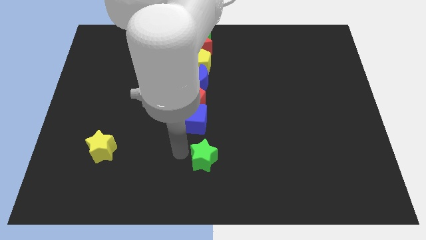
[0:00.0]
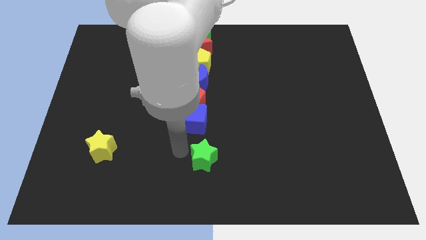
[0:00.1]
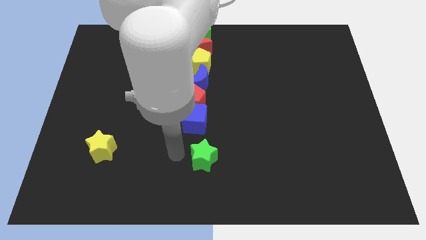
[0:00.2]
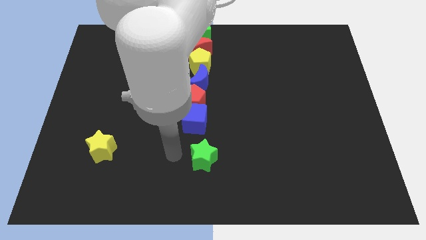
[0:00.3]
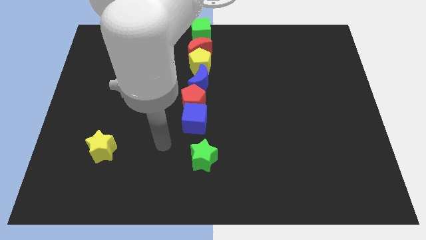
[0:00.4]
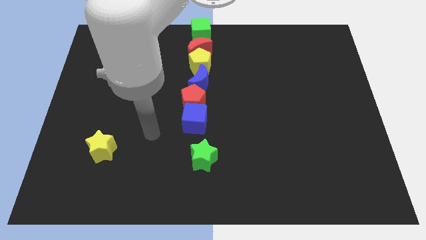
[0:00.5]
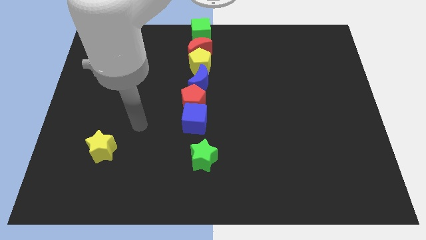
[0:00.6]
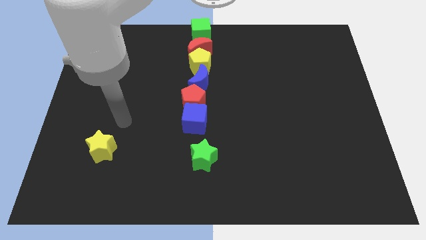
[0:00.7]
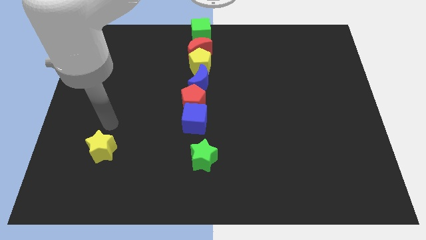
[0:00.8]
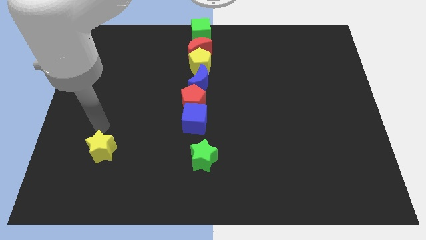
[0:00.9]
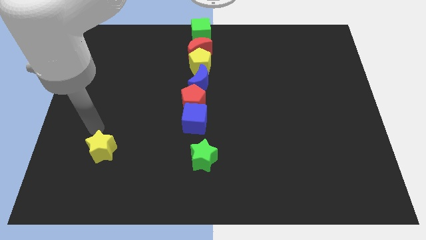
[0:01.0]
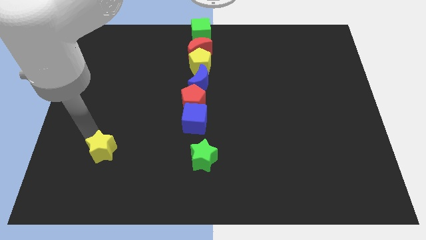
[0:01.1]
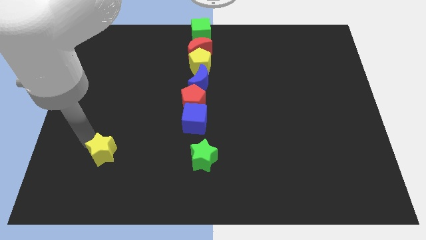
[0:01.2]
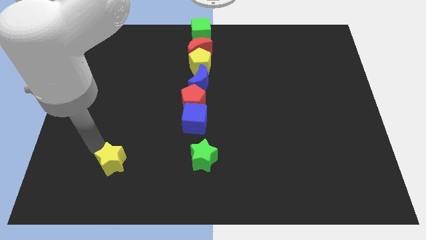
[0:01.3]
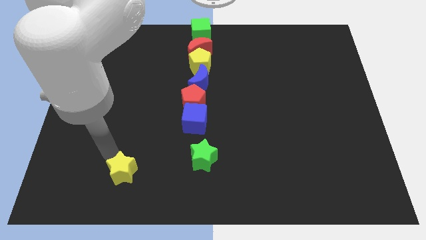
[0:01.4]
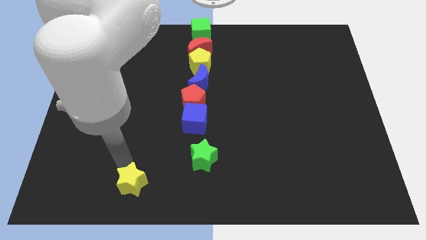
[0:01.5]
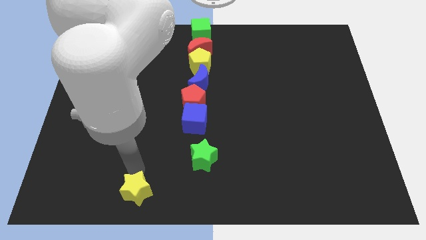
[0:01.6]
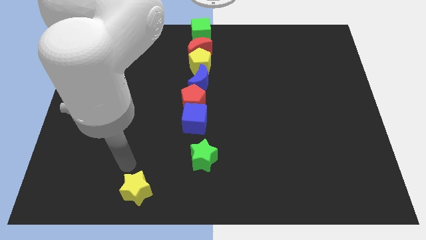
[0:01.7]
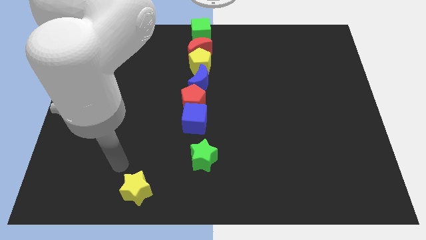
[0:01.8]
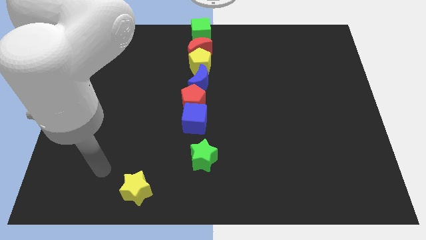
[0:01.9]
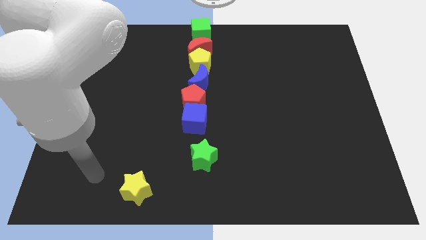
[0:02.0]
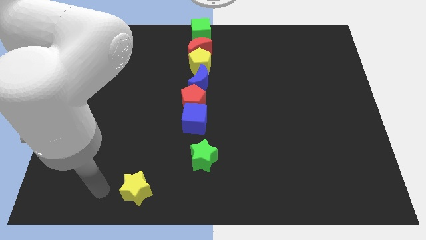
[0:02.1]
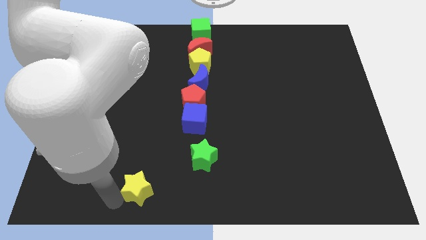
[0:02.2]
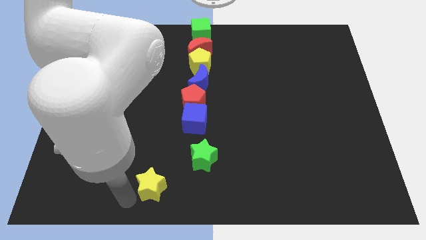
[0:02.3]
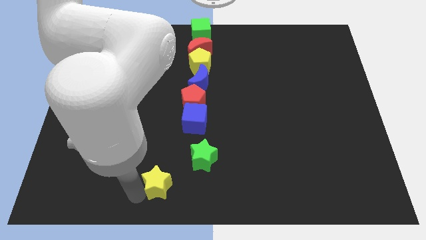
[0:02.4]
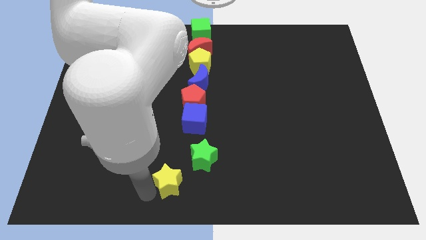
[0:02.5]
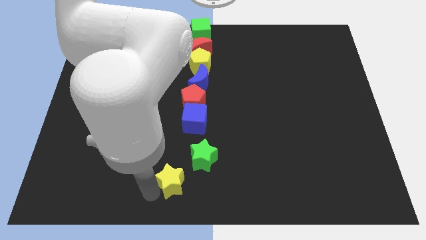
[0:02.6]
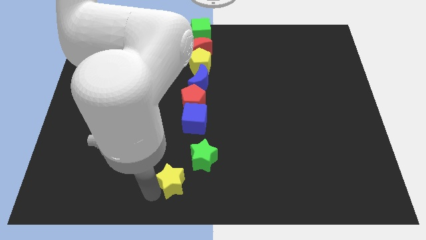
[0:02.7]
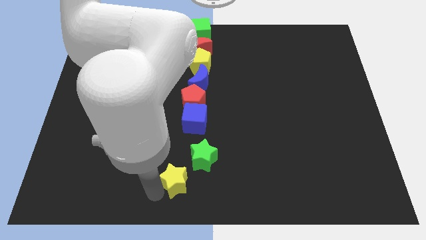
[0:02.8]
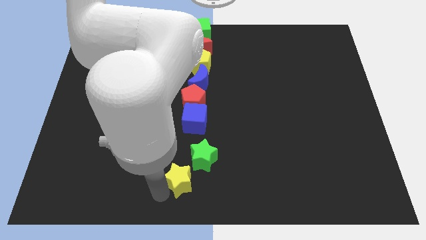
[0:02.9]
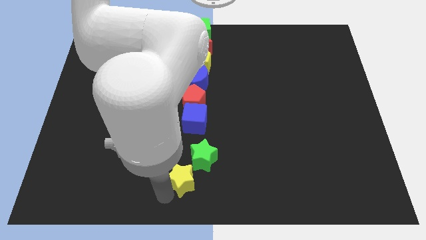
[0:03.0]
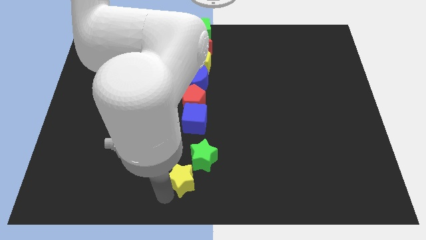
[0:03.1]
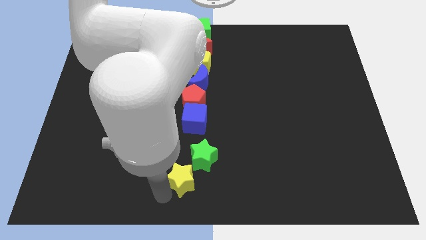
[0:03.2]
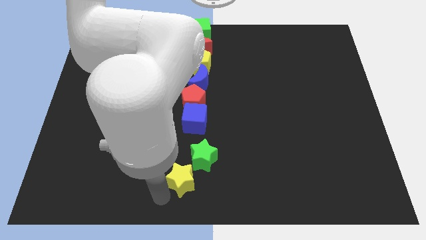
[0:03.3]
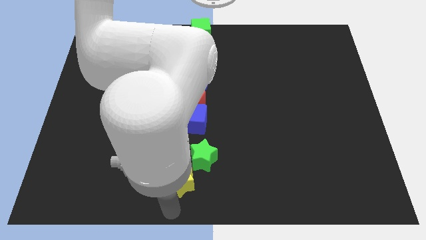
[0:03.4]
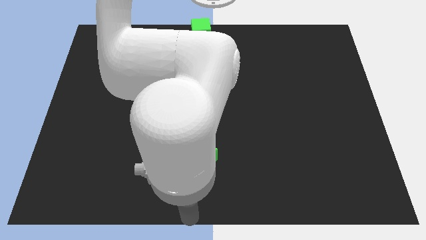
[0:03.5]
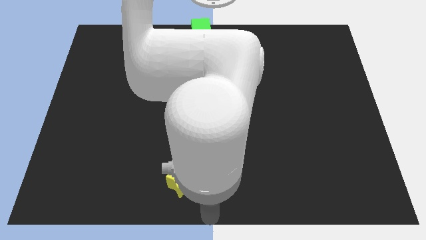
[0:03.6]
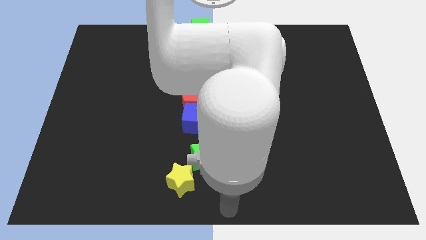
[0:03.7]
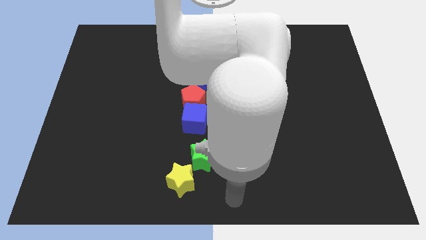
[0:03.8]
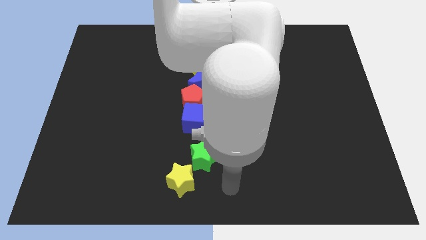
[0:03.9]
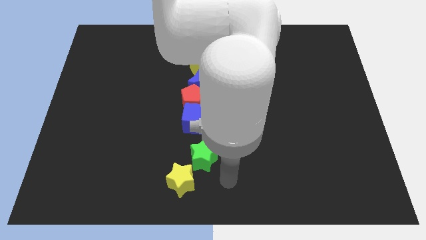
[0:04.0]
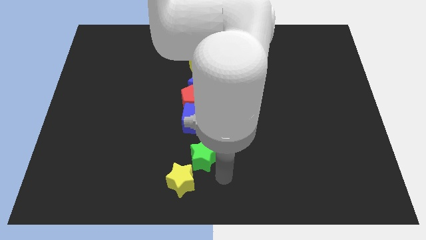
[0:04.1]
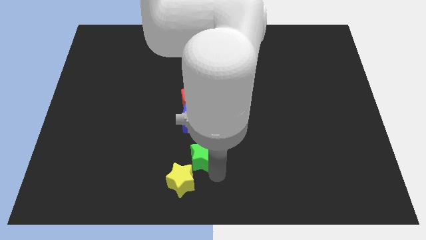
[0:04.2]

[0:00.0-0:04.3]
place the yellow star to the left bottom of the green star

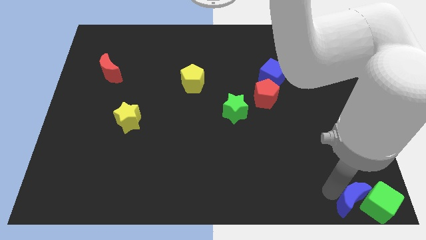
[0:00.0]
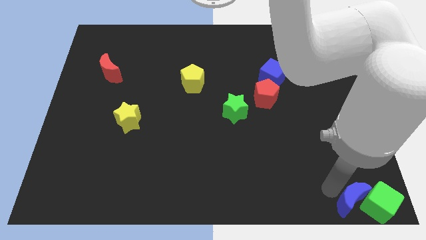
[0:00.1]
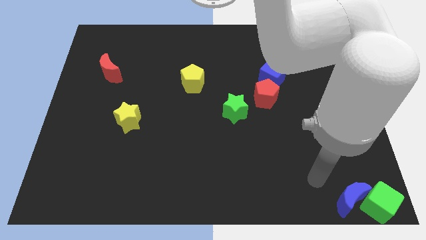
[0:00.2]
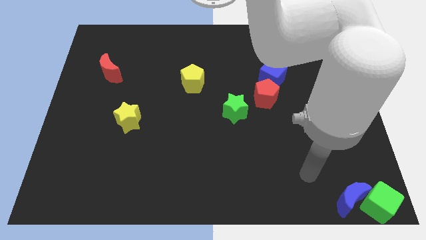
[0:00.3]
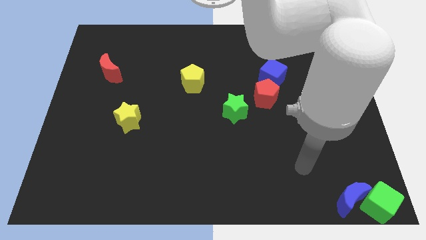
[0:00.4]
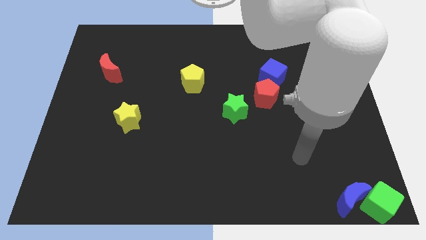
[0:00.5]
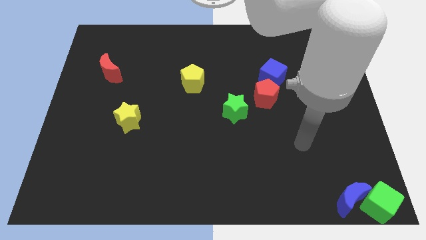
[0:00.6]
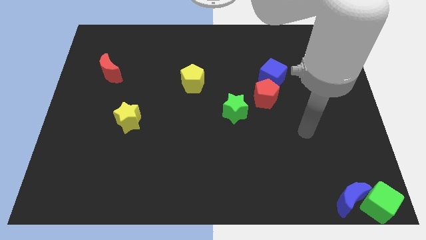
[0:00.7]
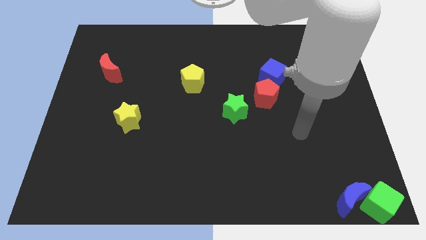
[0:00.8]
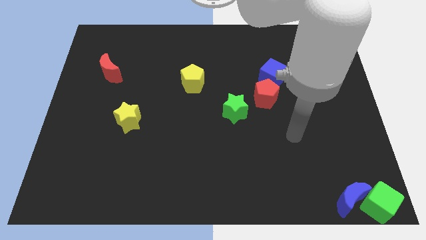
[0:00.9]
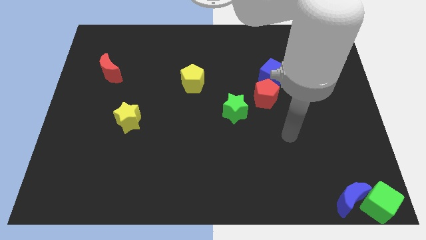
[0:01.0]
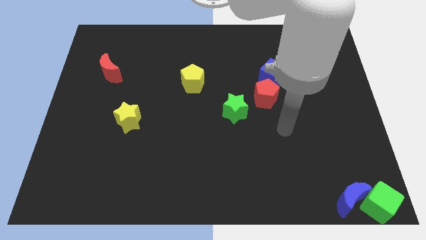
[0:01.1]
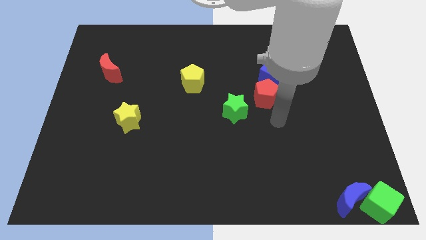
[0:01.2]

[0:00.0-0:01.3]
move your arm to the bottom of red pentagon

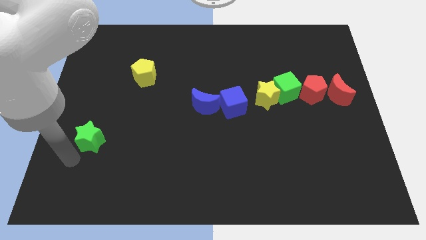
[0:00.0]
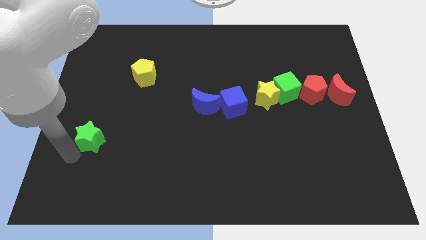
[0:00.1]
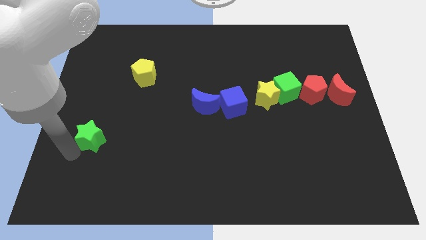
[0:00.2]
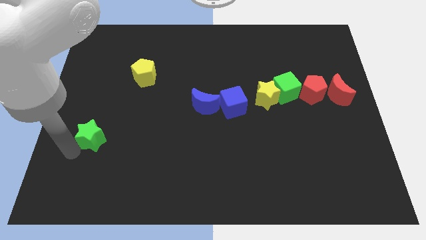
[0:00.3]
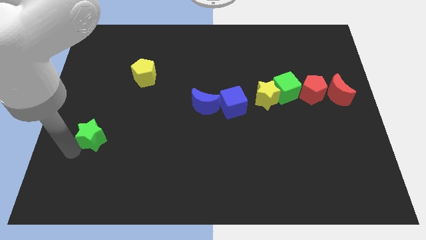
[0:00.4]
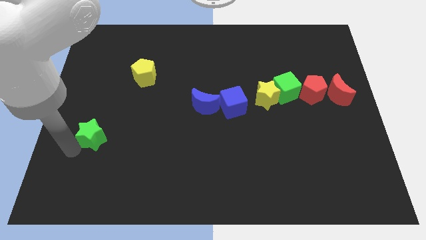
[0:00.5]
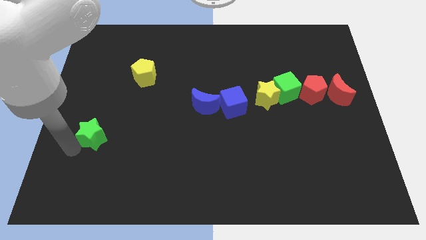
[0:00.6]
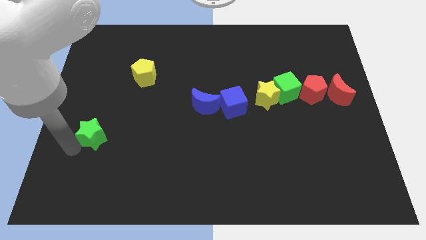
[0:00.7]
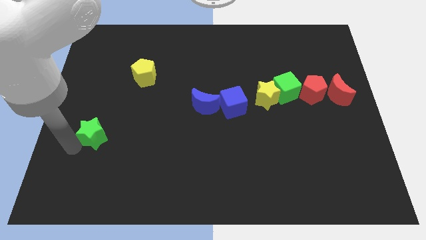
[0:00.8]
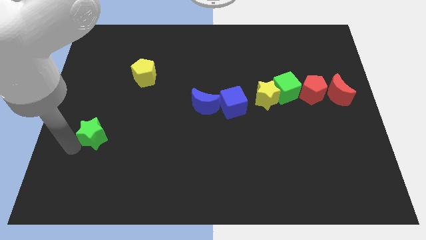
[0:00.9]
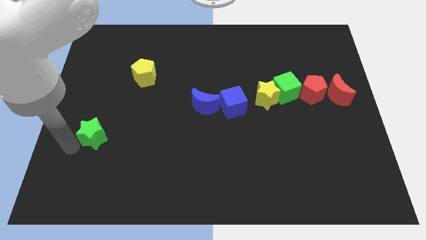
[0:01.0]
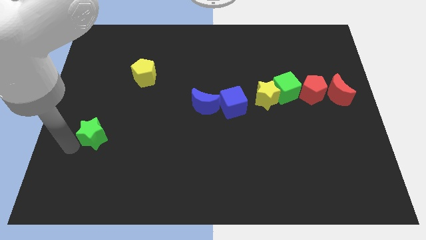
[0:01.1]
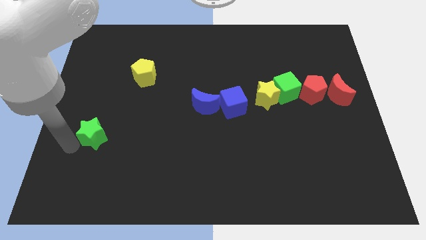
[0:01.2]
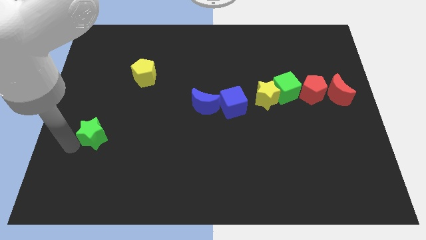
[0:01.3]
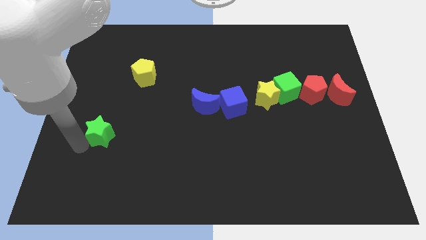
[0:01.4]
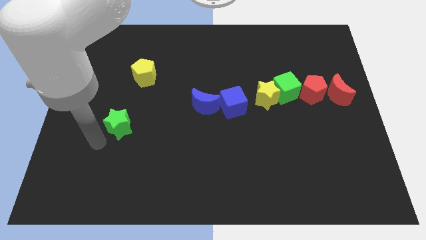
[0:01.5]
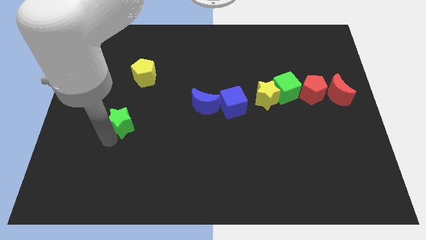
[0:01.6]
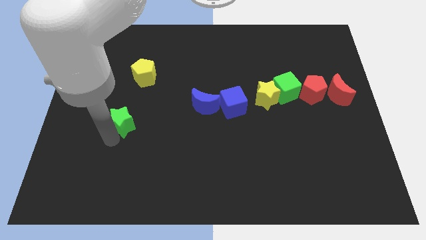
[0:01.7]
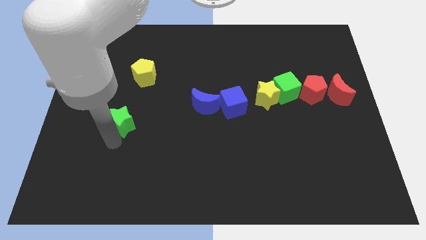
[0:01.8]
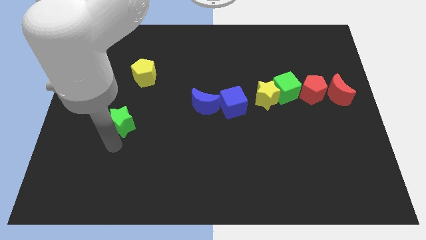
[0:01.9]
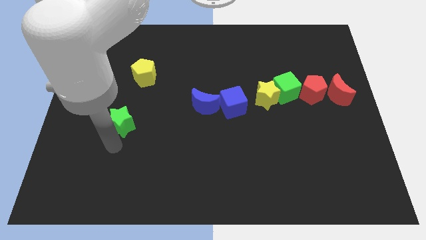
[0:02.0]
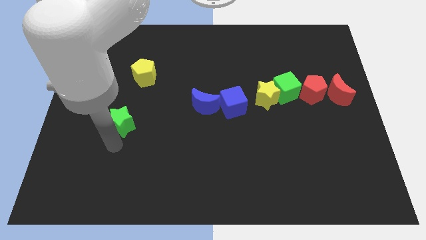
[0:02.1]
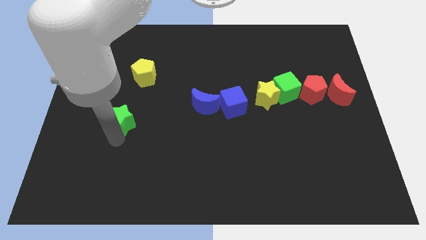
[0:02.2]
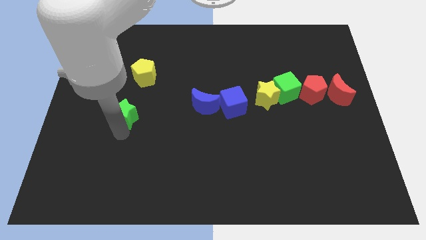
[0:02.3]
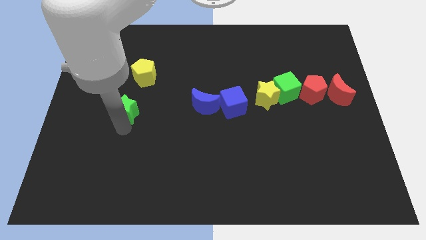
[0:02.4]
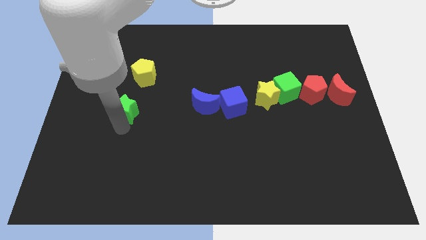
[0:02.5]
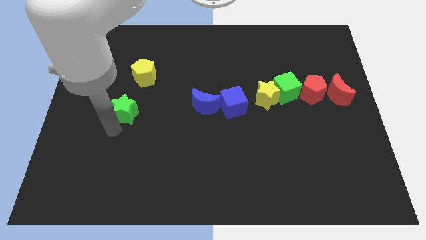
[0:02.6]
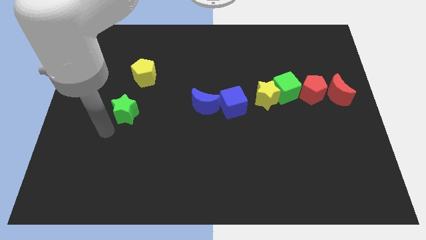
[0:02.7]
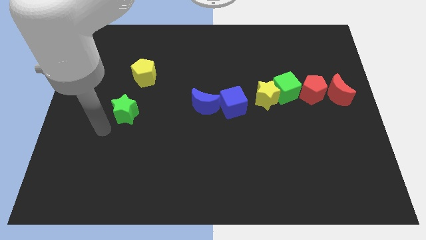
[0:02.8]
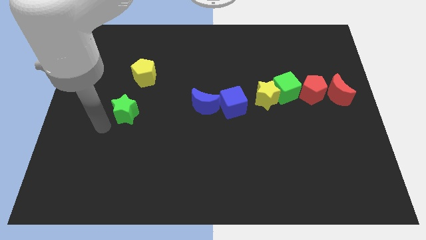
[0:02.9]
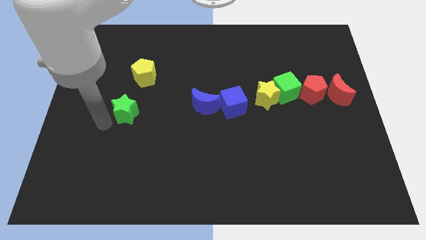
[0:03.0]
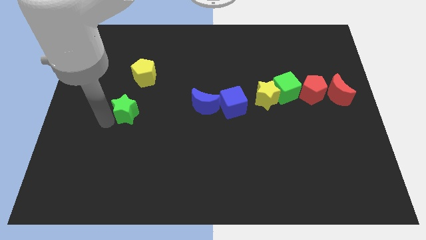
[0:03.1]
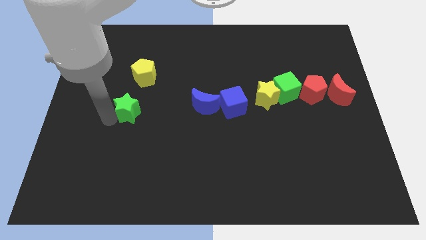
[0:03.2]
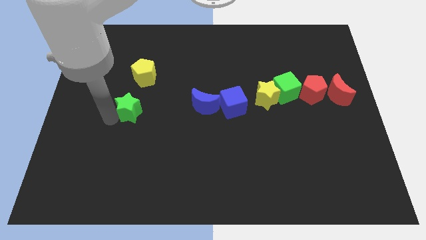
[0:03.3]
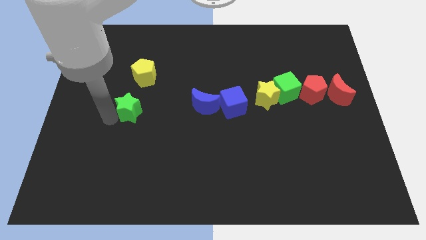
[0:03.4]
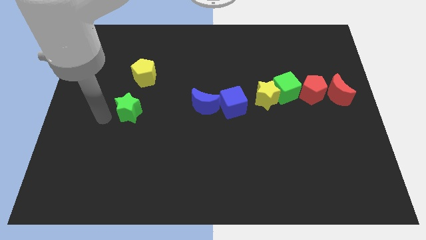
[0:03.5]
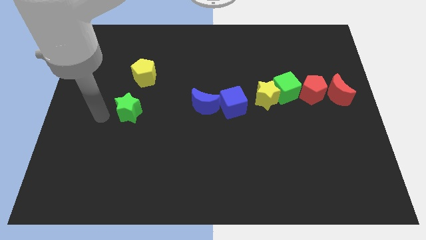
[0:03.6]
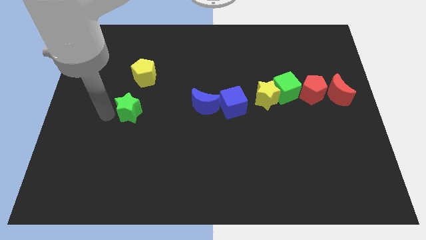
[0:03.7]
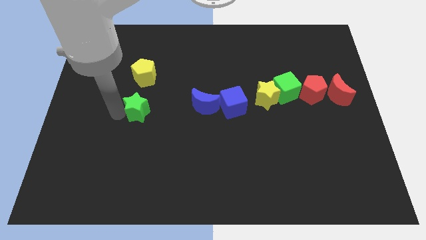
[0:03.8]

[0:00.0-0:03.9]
put the green star below the yellow pentagon
